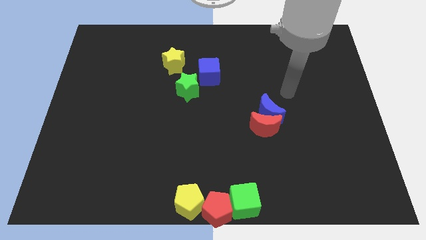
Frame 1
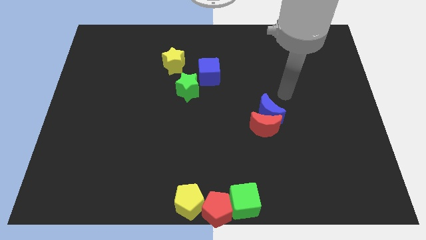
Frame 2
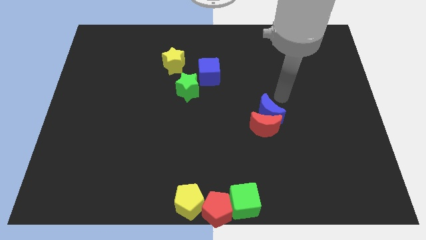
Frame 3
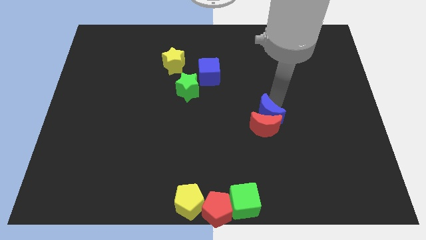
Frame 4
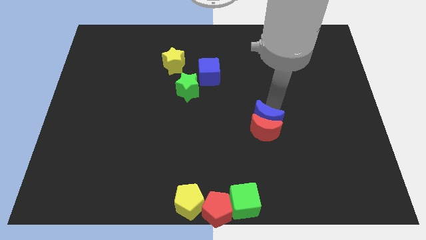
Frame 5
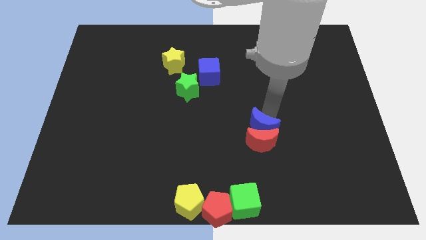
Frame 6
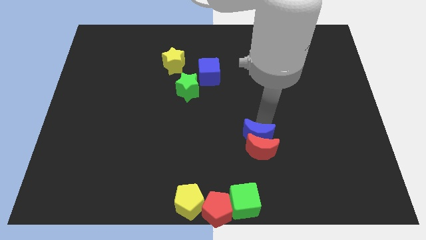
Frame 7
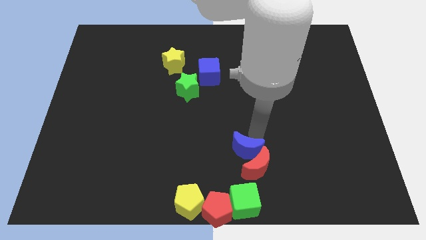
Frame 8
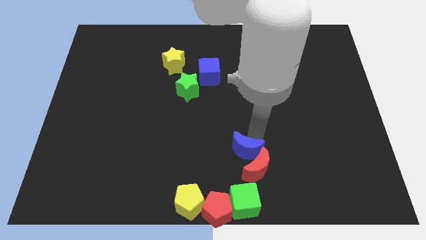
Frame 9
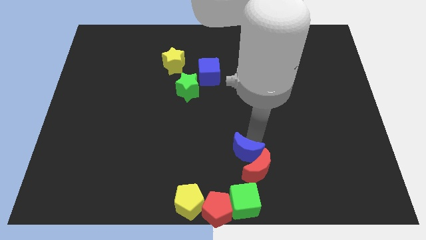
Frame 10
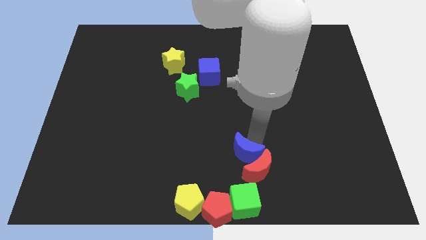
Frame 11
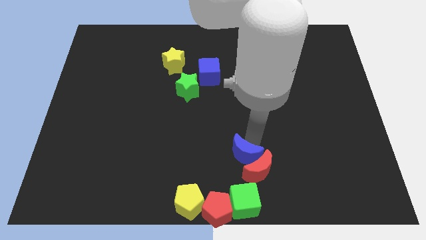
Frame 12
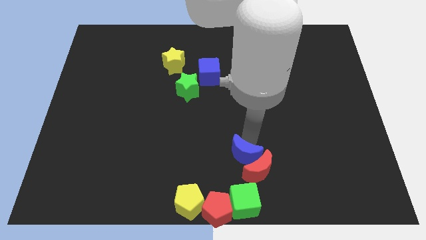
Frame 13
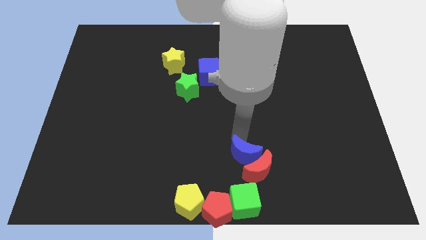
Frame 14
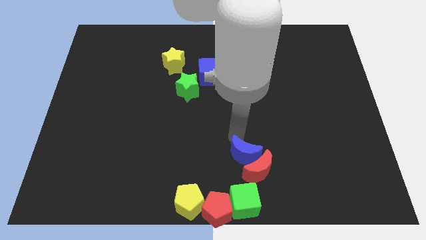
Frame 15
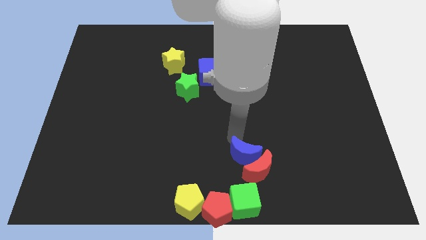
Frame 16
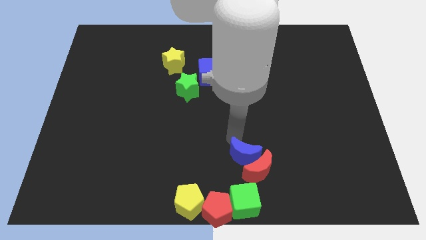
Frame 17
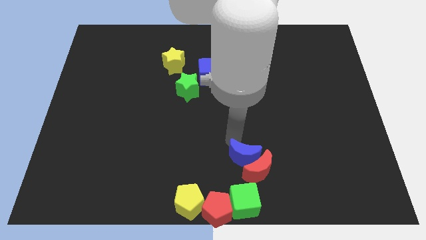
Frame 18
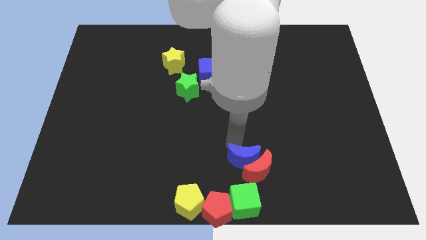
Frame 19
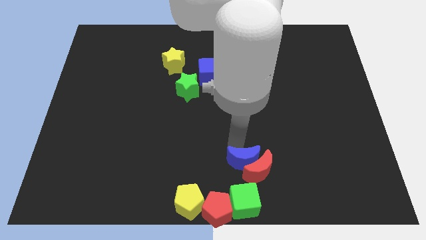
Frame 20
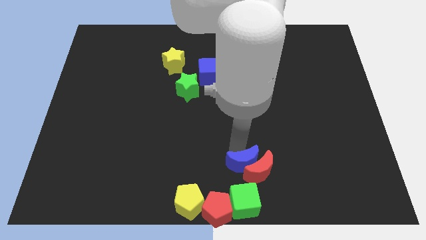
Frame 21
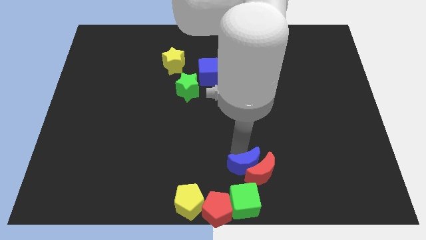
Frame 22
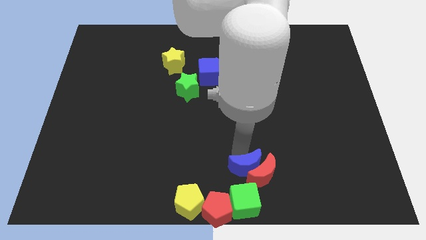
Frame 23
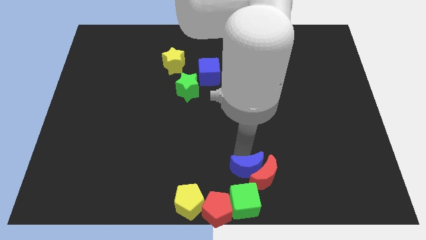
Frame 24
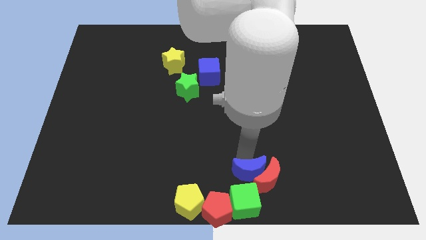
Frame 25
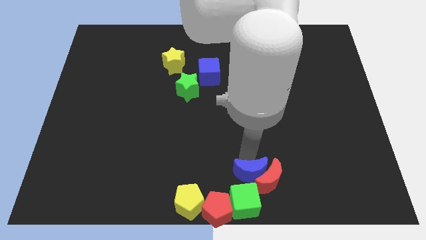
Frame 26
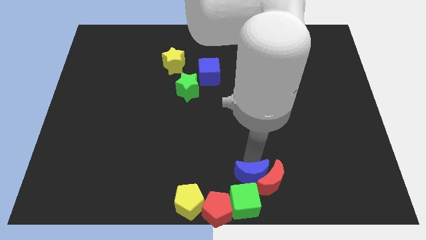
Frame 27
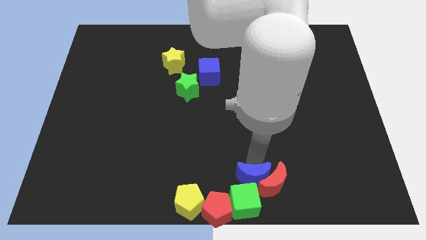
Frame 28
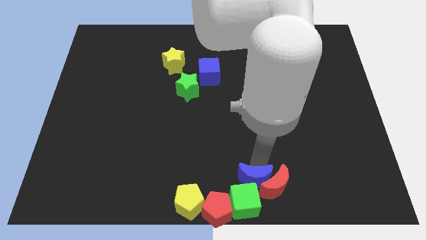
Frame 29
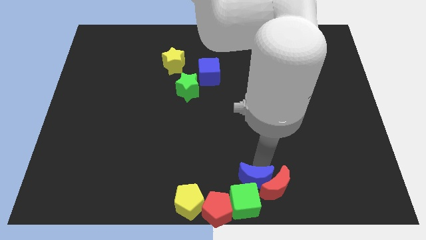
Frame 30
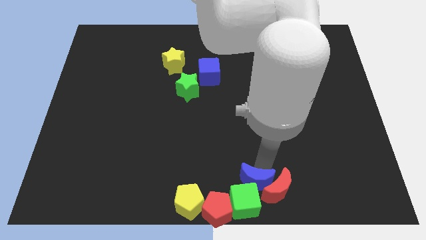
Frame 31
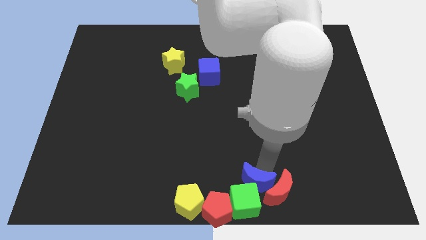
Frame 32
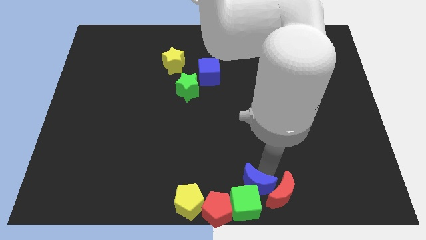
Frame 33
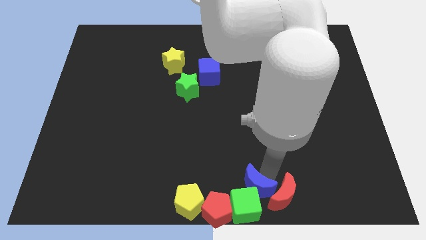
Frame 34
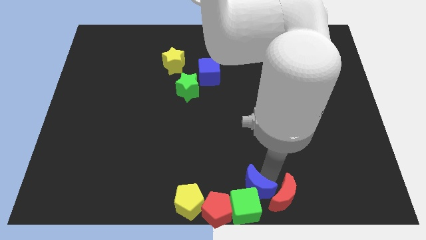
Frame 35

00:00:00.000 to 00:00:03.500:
push the blue crescent along with the red crescent into the green cube

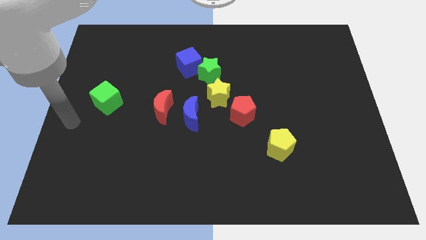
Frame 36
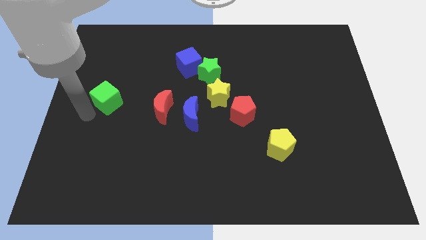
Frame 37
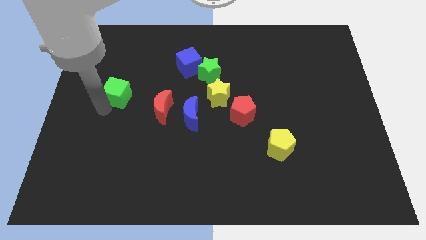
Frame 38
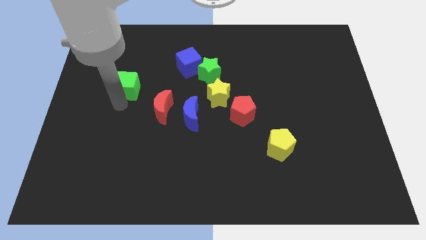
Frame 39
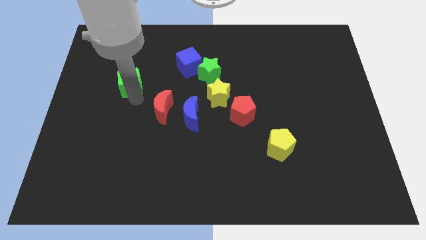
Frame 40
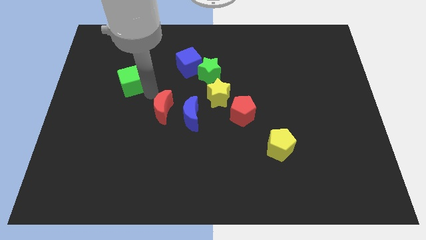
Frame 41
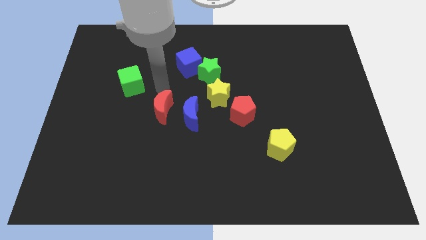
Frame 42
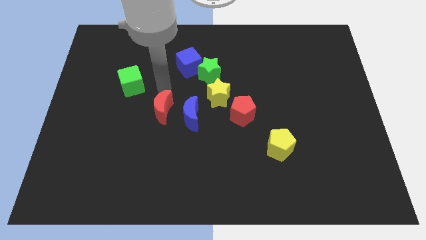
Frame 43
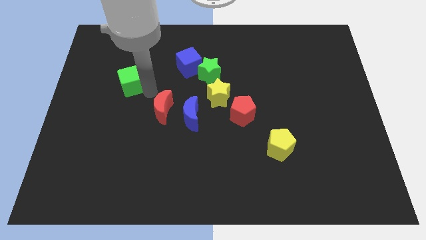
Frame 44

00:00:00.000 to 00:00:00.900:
push the green cube to the top left of the red crescent

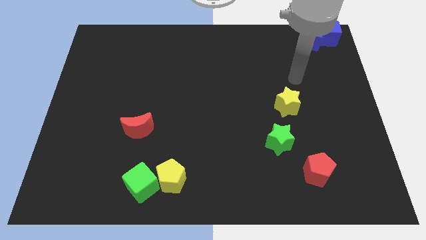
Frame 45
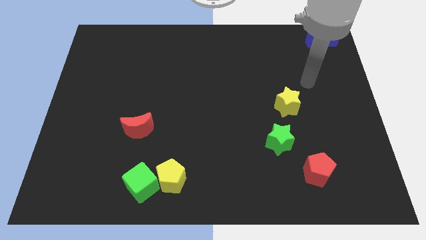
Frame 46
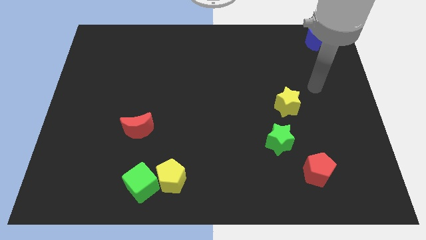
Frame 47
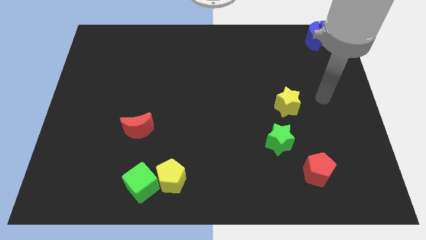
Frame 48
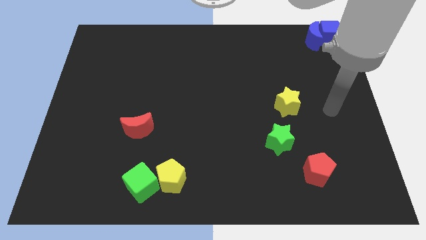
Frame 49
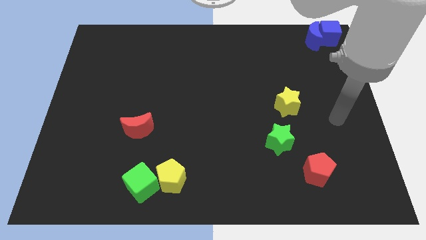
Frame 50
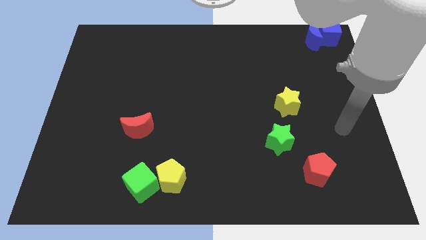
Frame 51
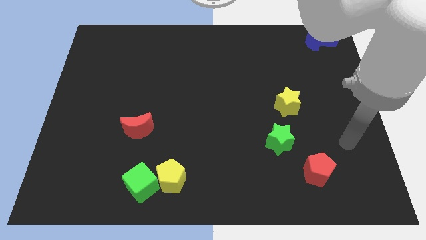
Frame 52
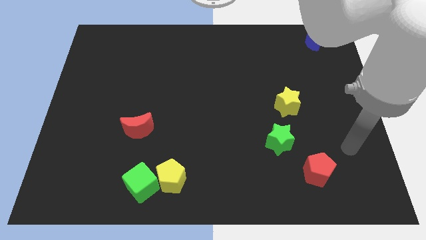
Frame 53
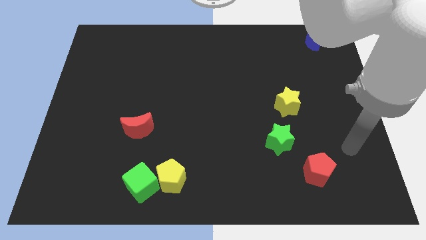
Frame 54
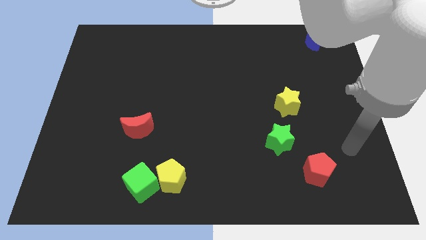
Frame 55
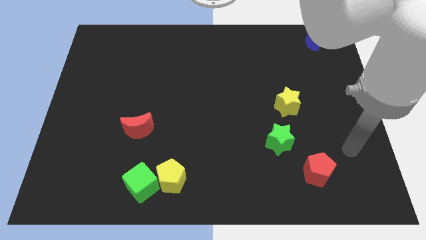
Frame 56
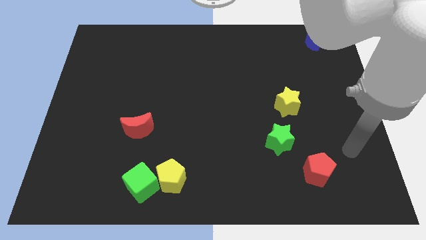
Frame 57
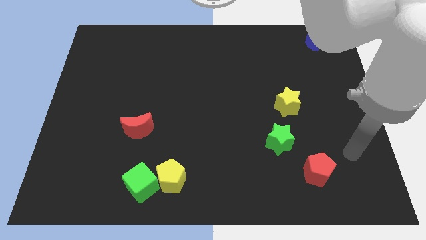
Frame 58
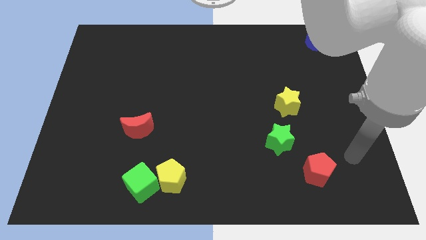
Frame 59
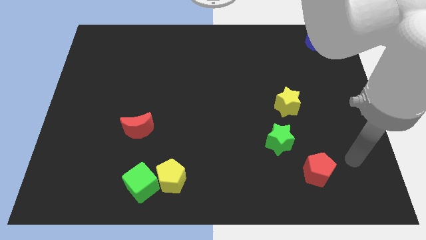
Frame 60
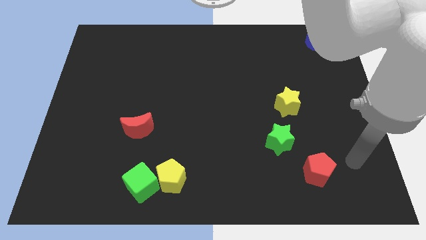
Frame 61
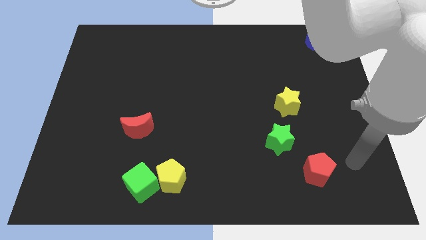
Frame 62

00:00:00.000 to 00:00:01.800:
point your arm at the right of the red pentagon

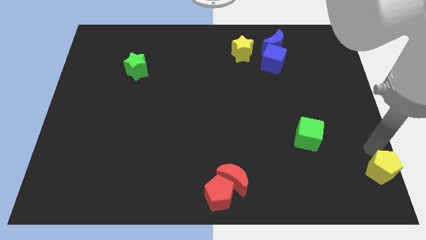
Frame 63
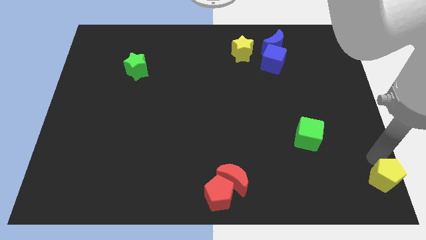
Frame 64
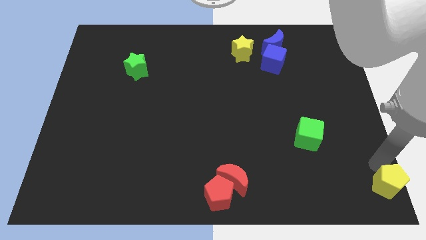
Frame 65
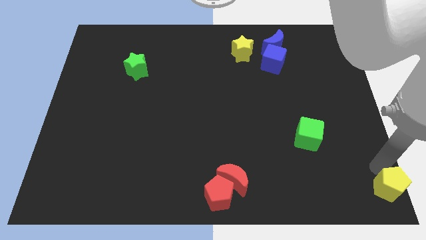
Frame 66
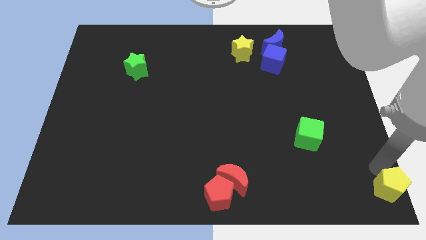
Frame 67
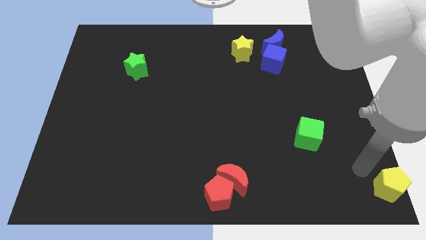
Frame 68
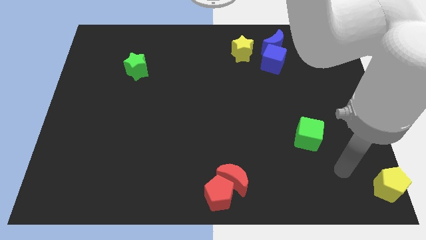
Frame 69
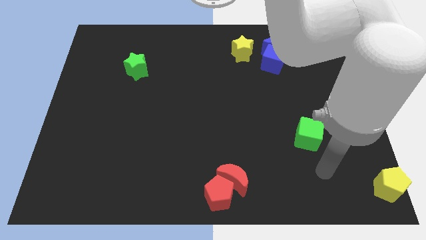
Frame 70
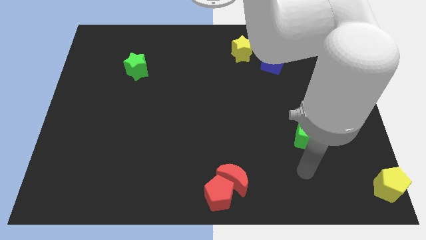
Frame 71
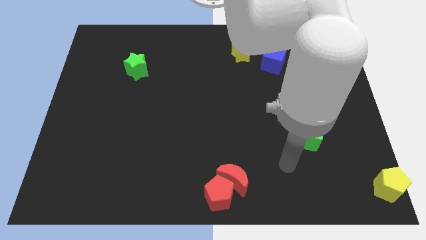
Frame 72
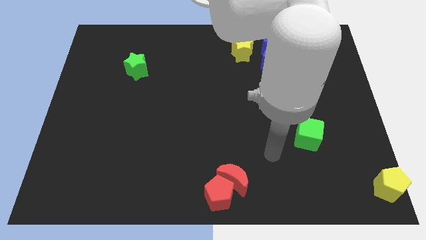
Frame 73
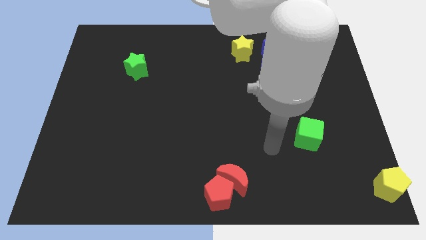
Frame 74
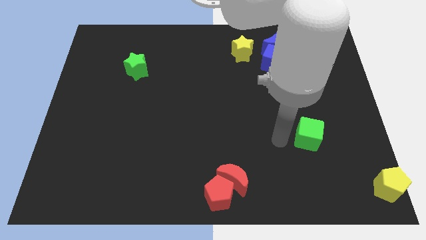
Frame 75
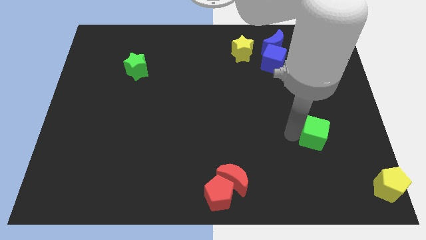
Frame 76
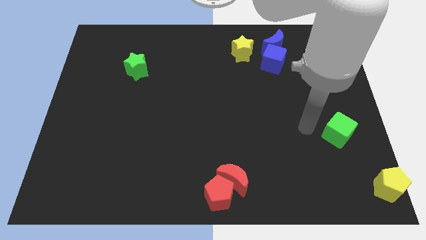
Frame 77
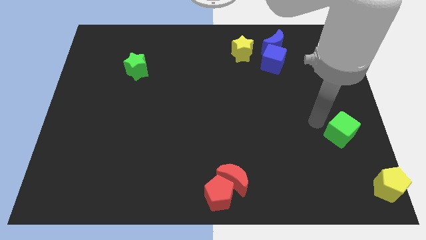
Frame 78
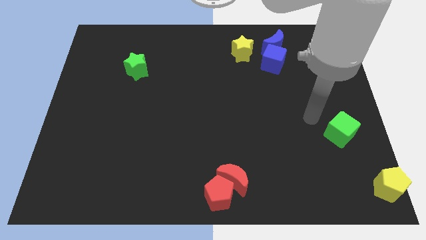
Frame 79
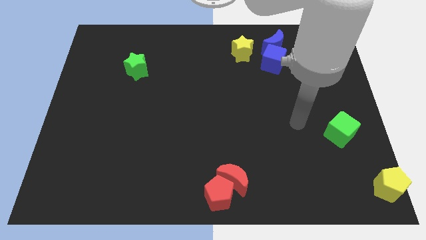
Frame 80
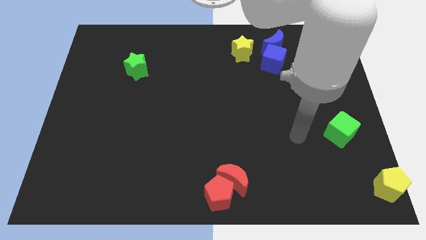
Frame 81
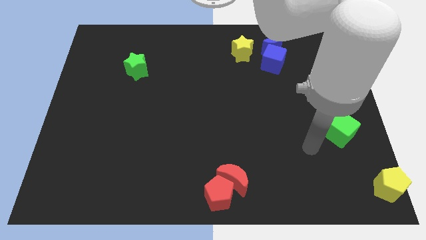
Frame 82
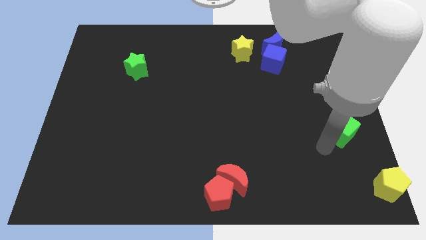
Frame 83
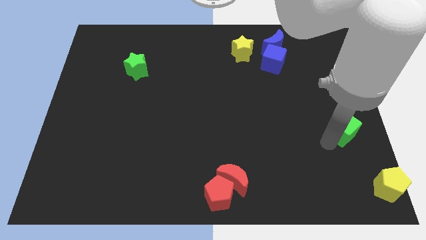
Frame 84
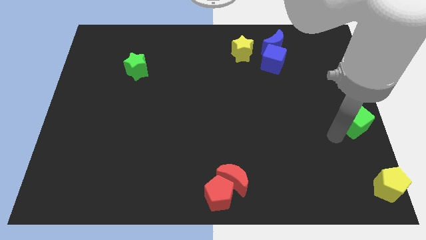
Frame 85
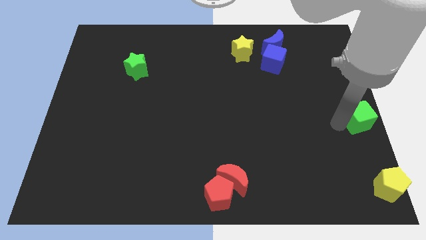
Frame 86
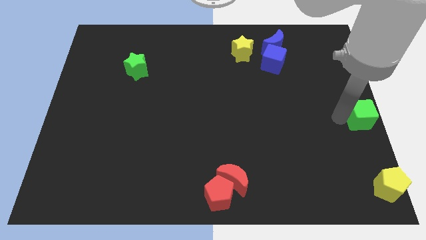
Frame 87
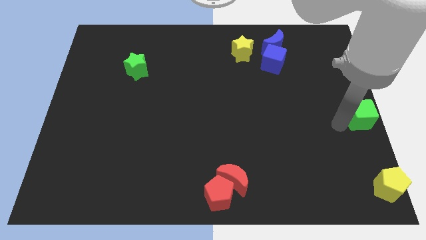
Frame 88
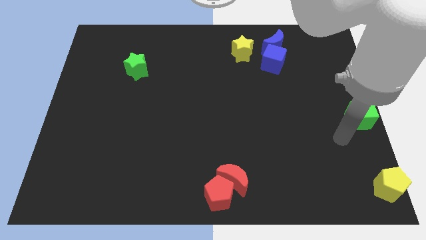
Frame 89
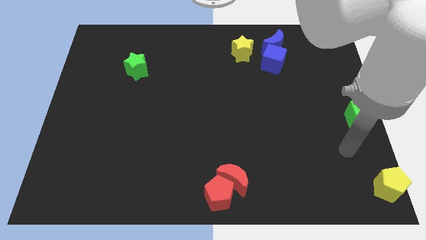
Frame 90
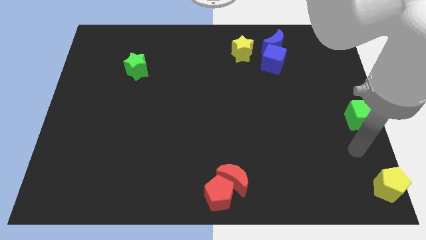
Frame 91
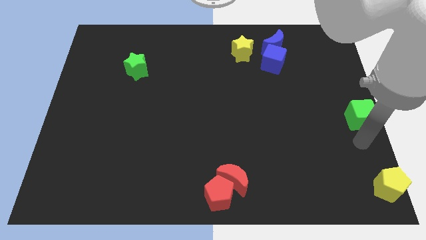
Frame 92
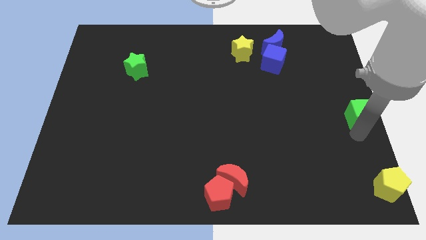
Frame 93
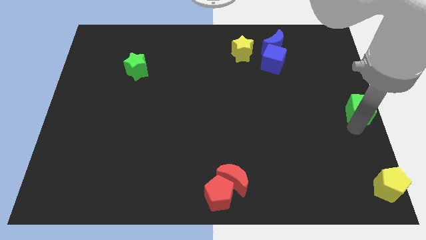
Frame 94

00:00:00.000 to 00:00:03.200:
move the green cube to the middle right of the board
